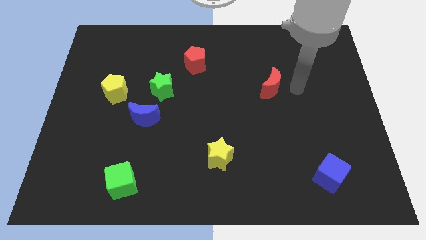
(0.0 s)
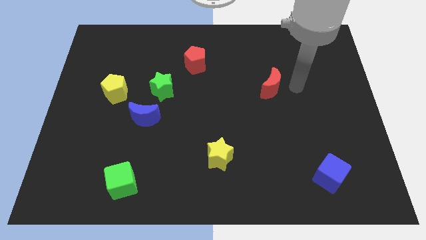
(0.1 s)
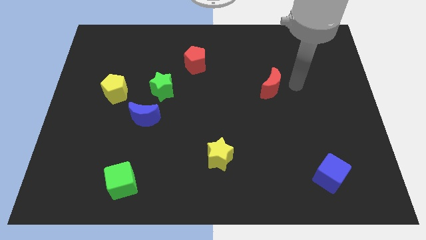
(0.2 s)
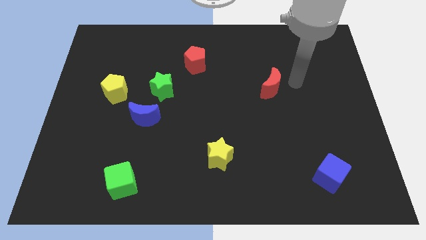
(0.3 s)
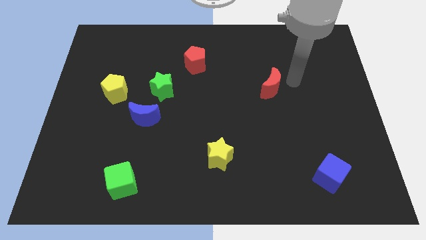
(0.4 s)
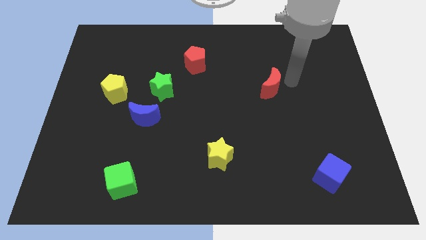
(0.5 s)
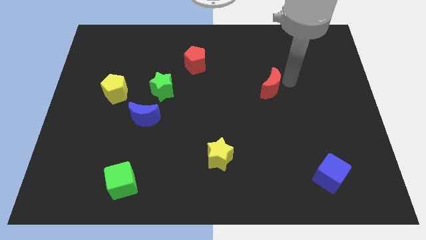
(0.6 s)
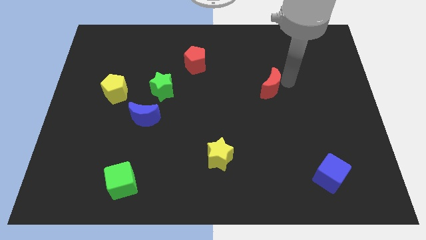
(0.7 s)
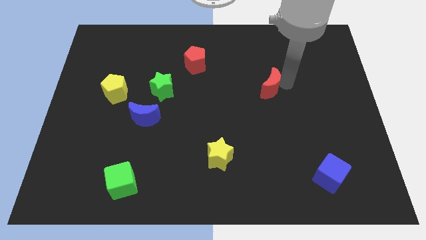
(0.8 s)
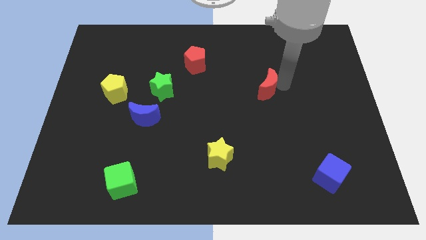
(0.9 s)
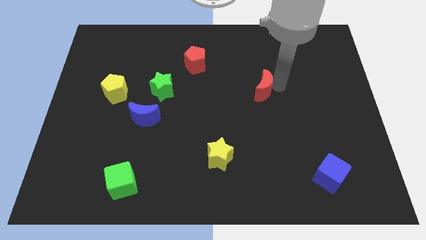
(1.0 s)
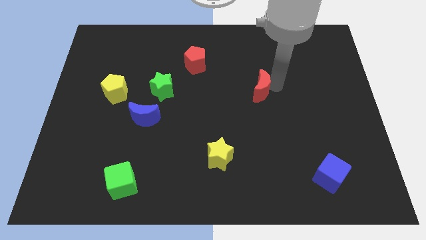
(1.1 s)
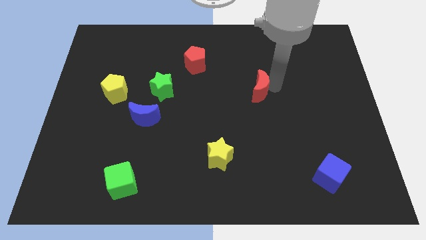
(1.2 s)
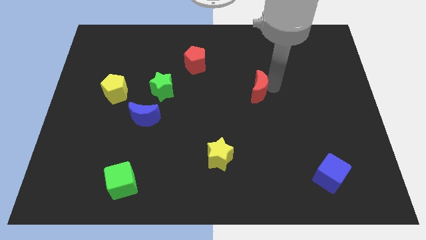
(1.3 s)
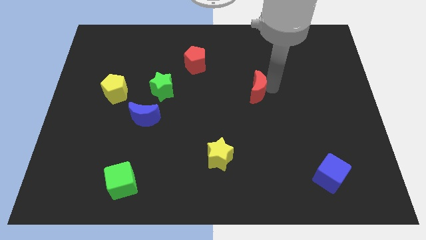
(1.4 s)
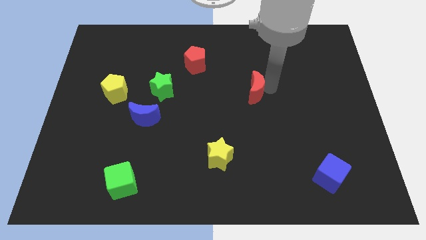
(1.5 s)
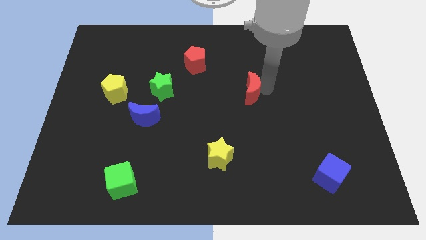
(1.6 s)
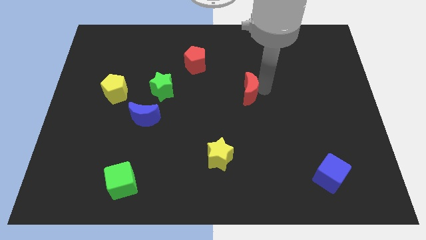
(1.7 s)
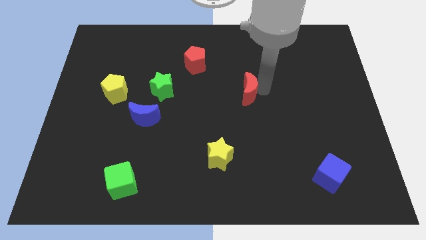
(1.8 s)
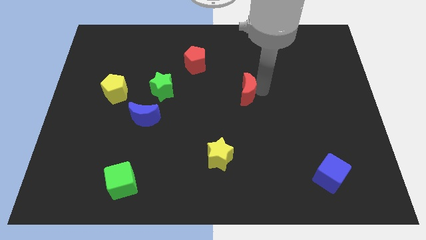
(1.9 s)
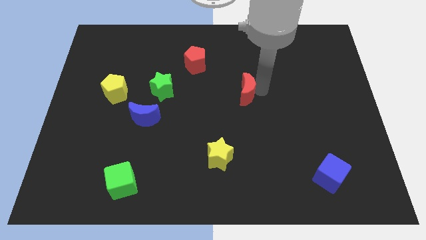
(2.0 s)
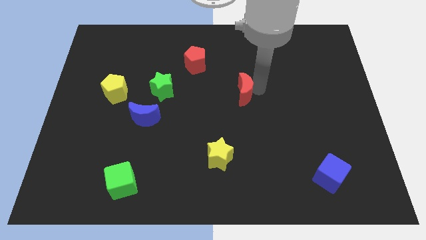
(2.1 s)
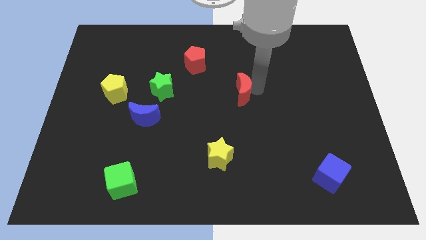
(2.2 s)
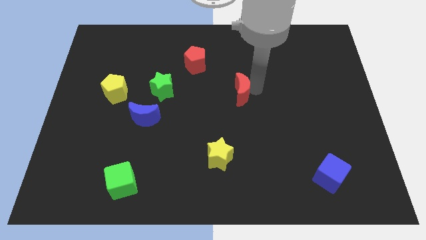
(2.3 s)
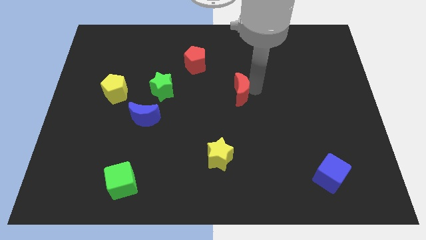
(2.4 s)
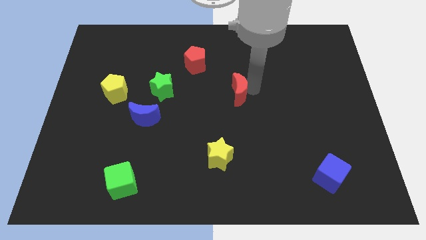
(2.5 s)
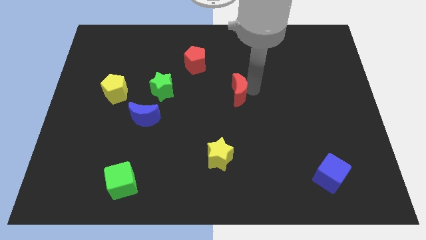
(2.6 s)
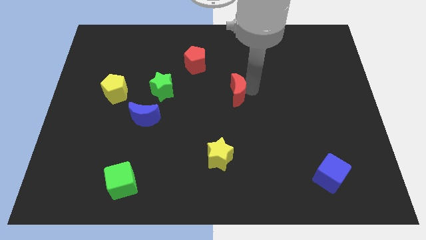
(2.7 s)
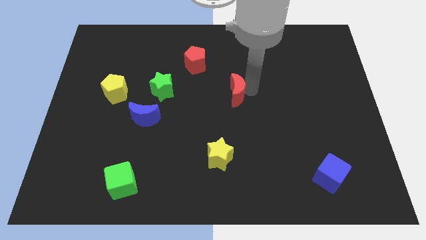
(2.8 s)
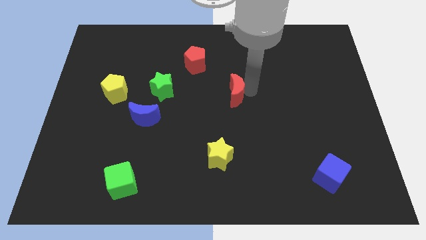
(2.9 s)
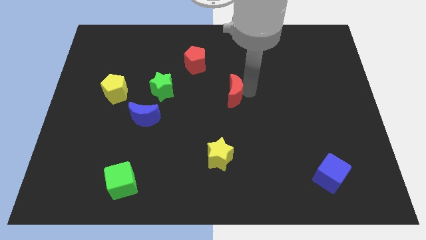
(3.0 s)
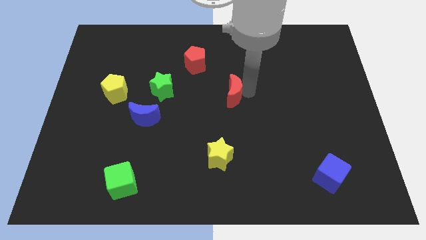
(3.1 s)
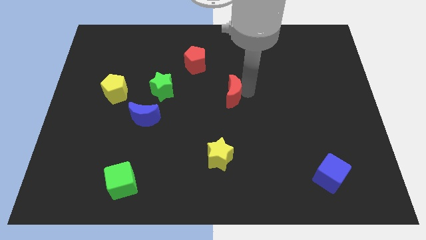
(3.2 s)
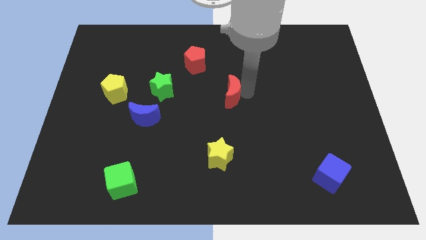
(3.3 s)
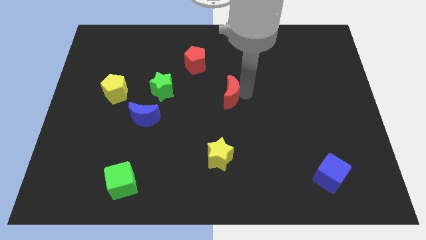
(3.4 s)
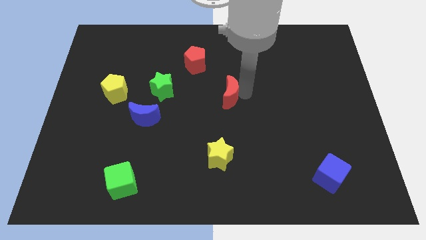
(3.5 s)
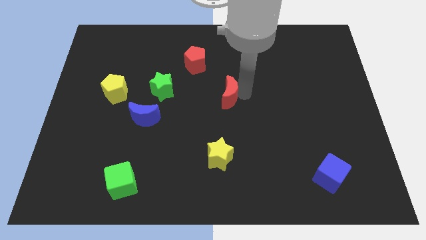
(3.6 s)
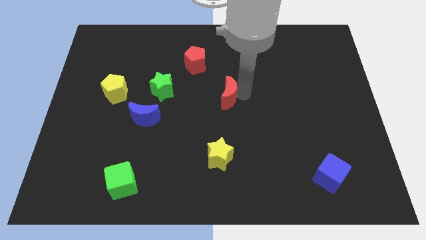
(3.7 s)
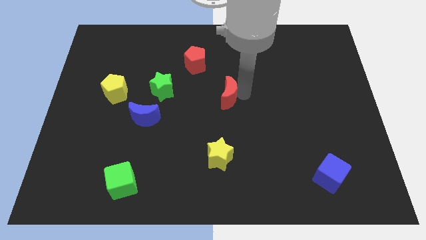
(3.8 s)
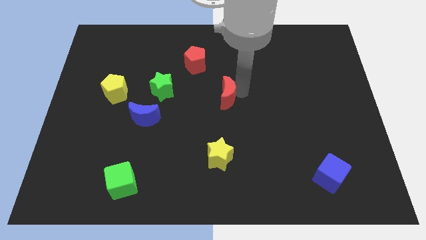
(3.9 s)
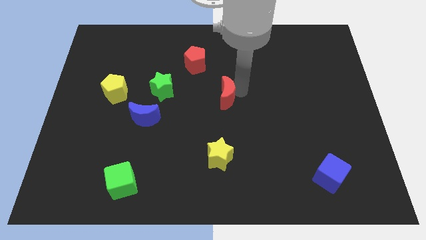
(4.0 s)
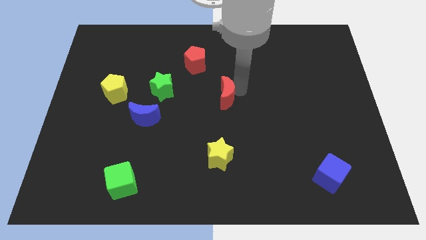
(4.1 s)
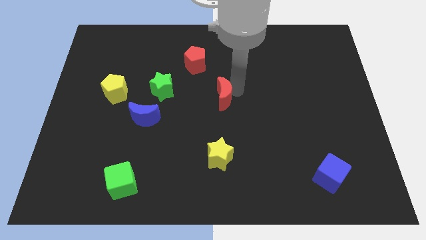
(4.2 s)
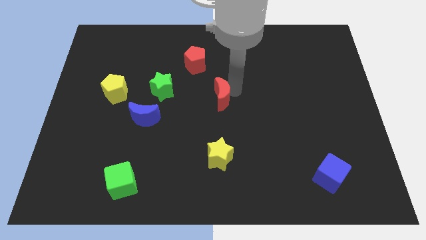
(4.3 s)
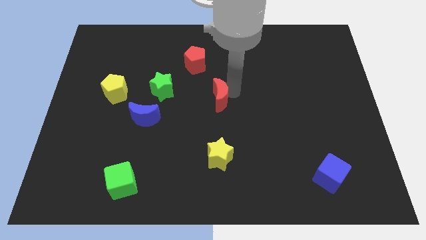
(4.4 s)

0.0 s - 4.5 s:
push the red moon to the vertical top side of the yellow star

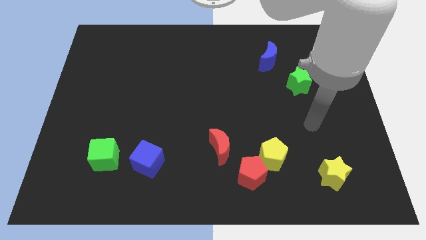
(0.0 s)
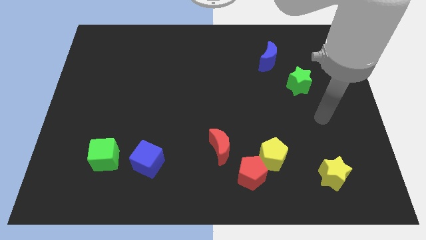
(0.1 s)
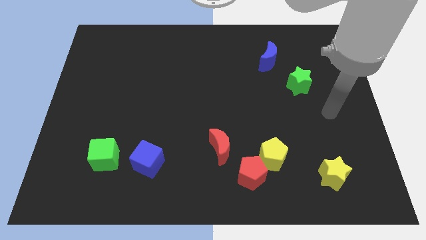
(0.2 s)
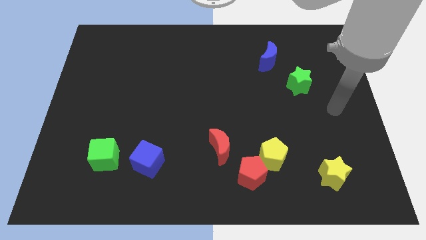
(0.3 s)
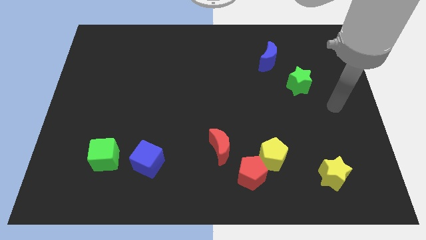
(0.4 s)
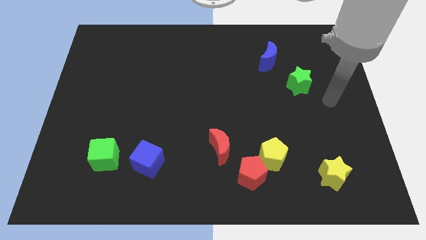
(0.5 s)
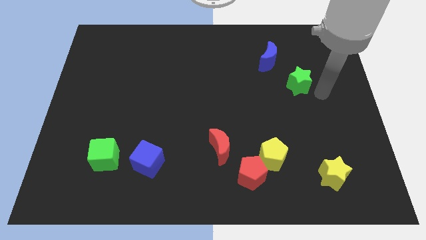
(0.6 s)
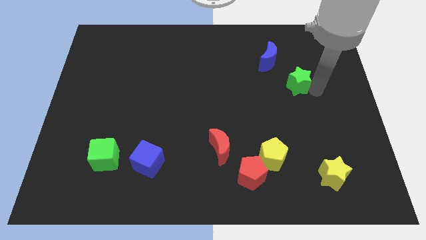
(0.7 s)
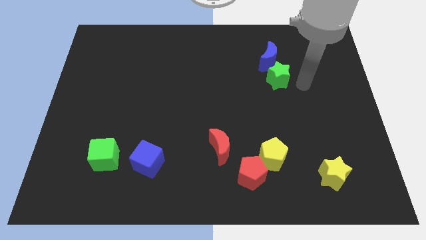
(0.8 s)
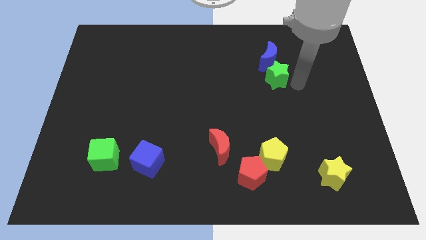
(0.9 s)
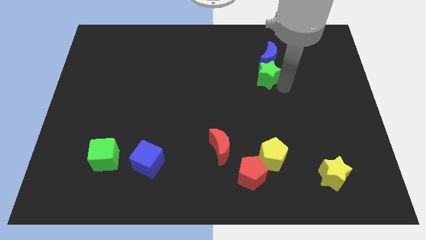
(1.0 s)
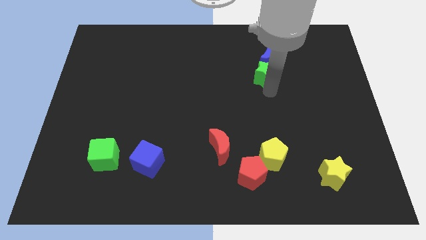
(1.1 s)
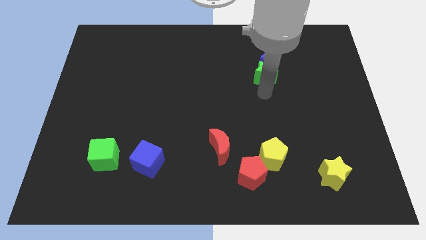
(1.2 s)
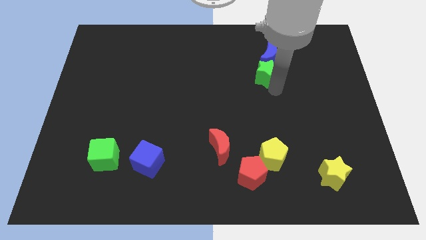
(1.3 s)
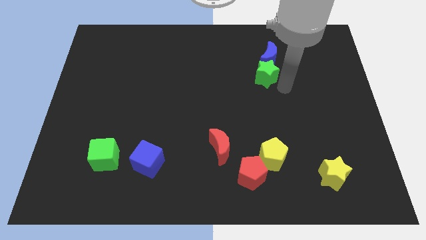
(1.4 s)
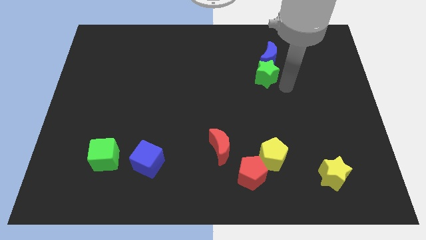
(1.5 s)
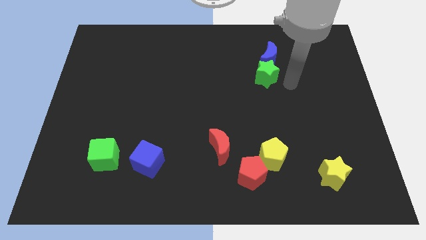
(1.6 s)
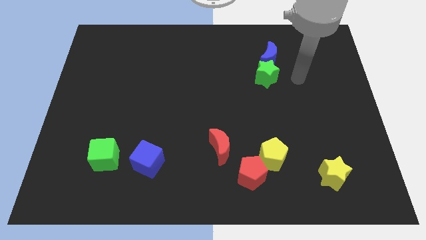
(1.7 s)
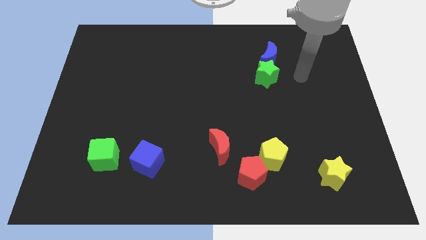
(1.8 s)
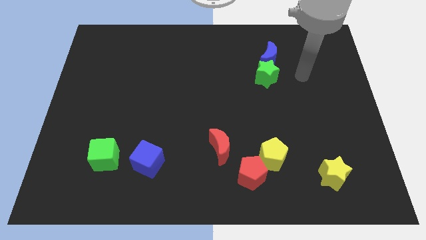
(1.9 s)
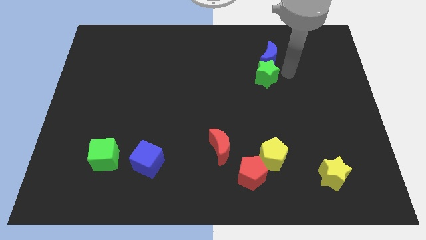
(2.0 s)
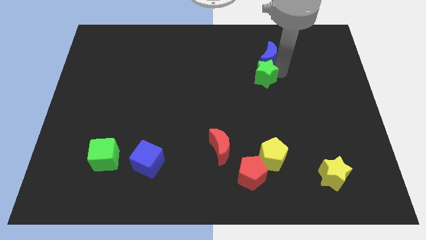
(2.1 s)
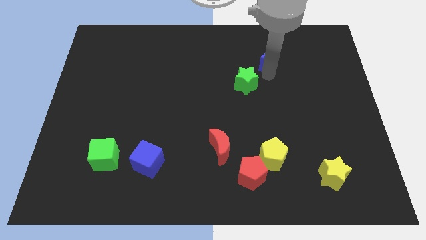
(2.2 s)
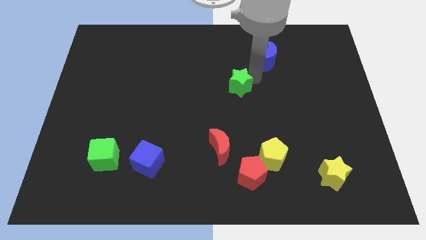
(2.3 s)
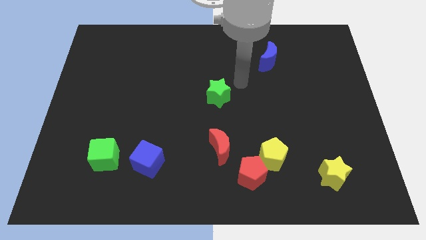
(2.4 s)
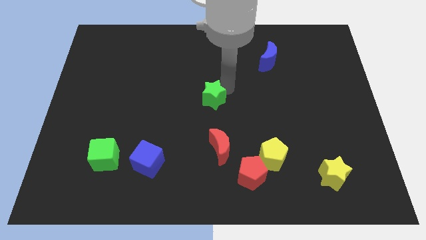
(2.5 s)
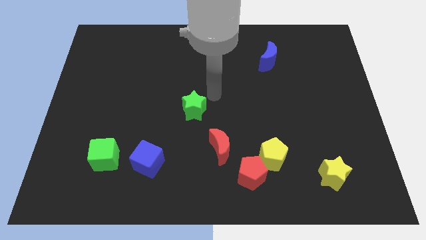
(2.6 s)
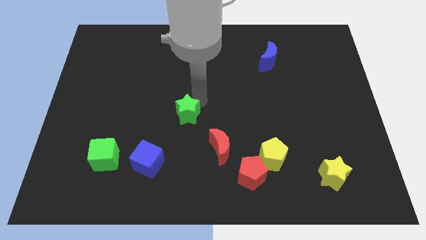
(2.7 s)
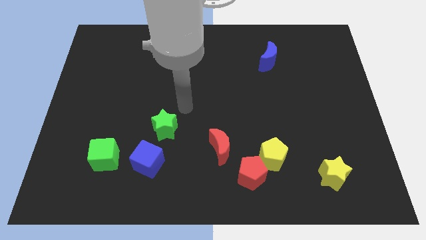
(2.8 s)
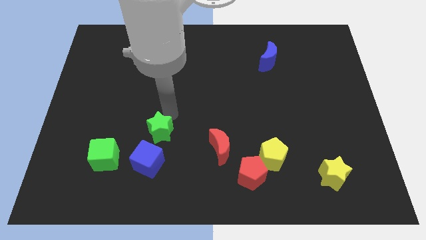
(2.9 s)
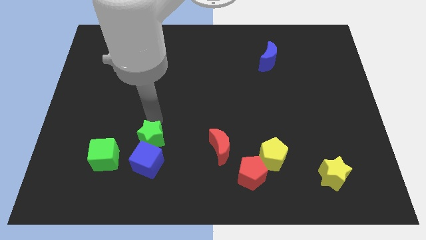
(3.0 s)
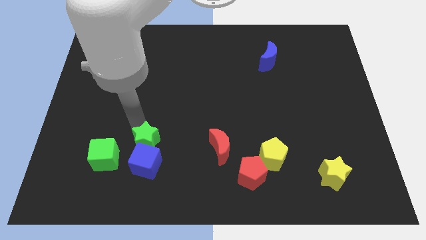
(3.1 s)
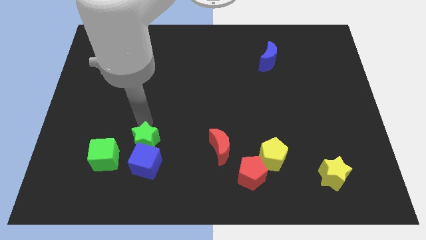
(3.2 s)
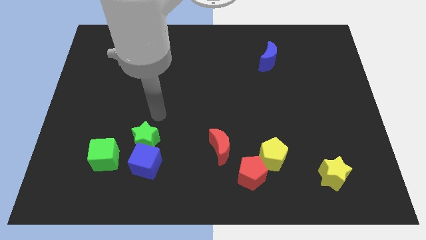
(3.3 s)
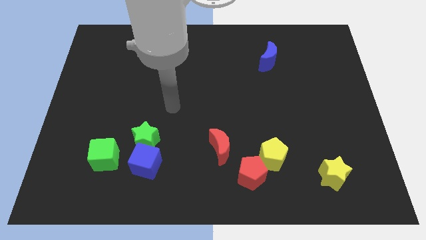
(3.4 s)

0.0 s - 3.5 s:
push the green star into the top of the blue cube

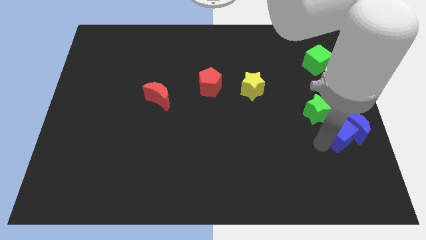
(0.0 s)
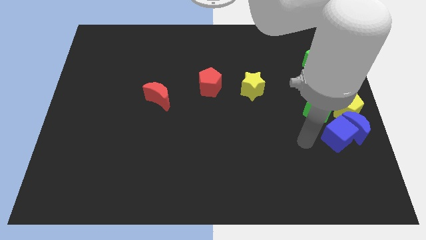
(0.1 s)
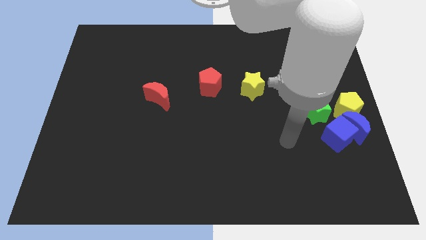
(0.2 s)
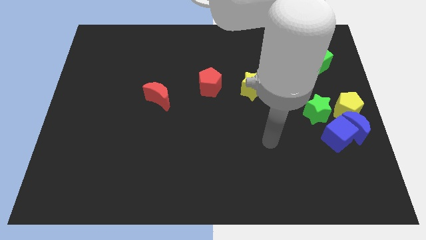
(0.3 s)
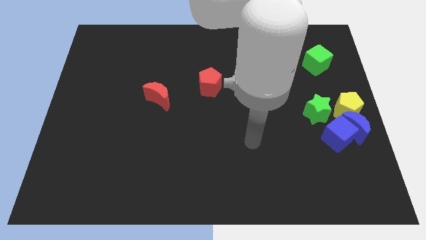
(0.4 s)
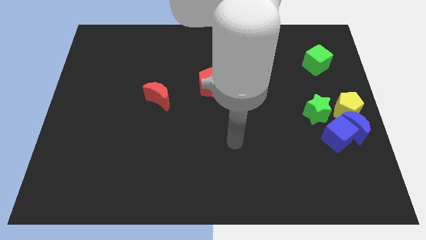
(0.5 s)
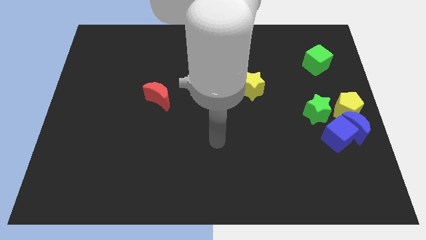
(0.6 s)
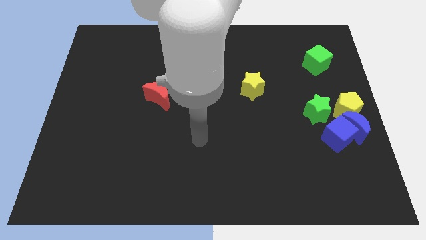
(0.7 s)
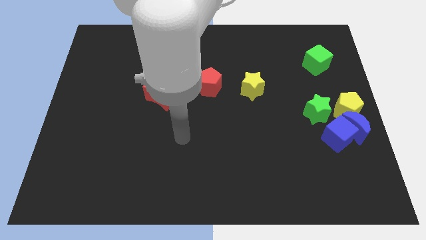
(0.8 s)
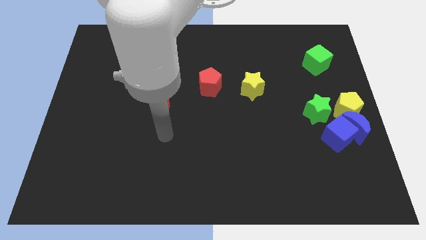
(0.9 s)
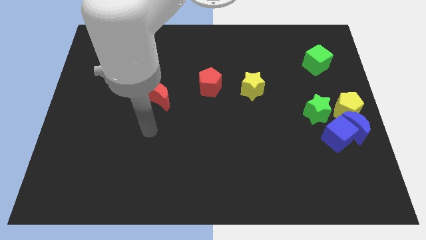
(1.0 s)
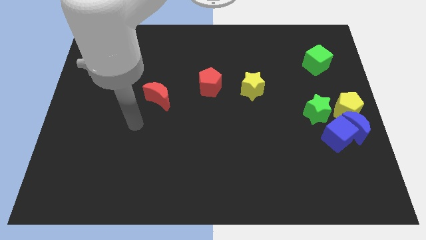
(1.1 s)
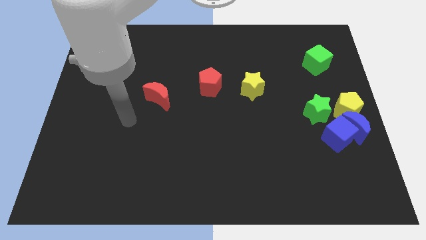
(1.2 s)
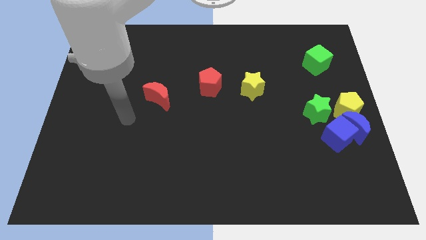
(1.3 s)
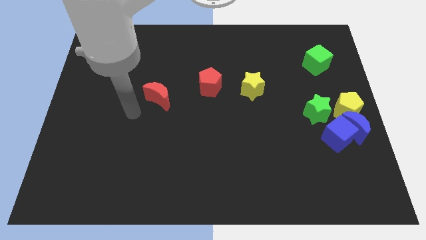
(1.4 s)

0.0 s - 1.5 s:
move your arms towards the left side of the board
